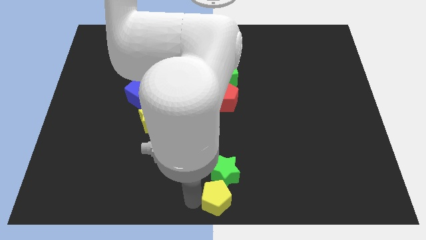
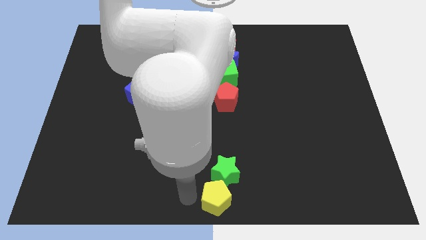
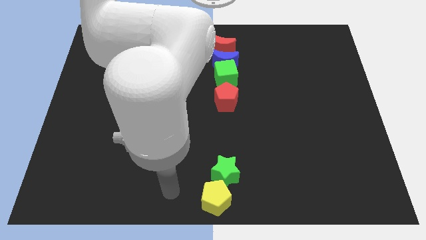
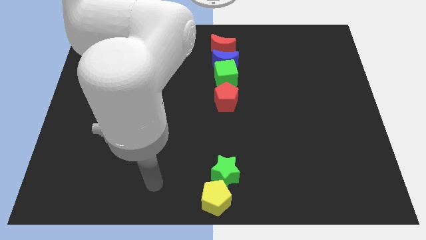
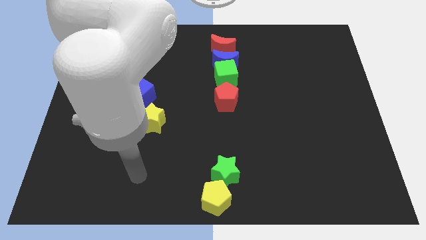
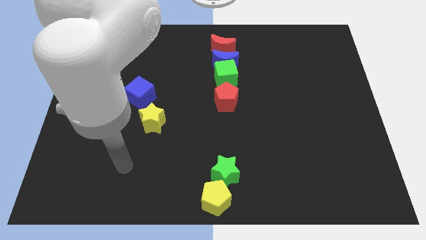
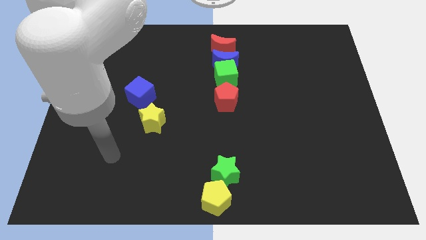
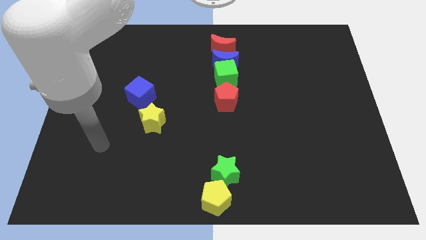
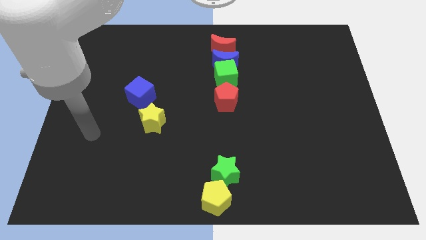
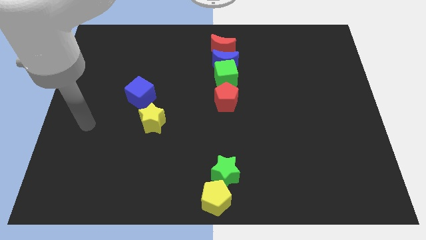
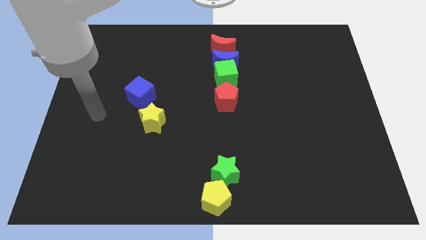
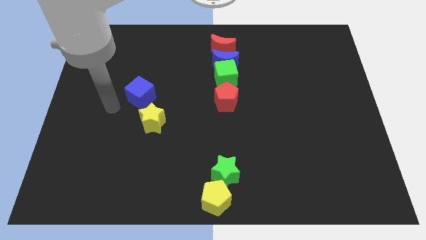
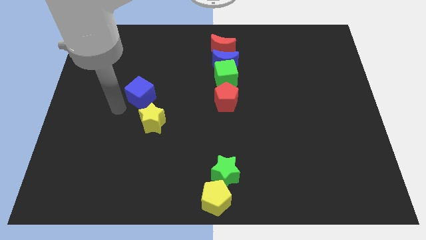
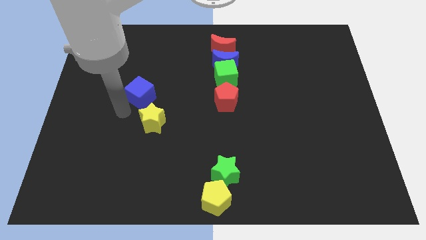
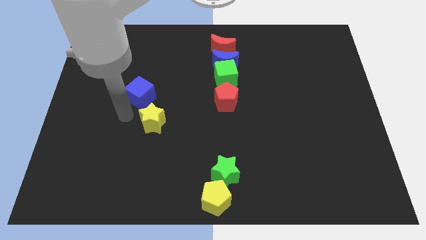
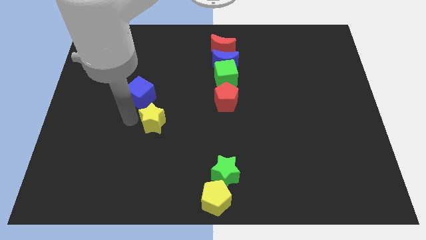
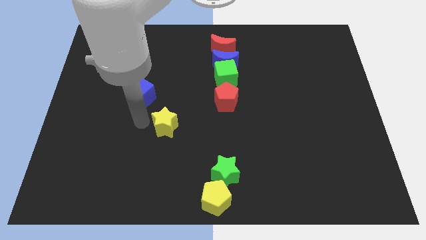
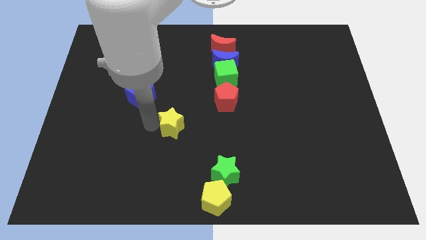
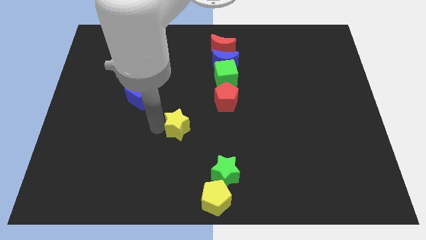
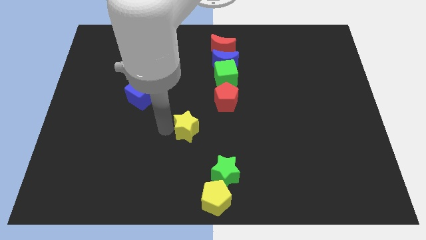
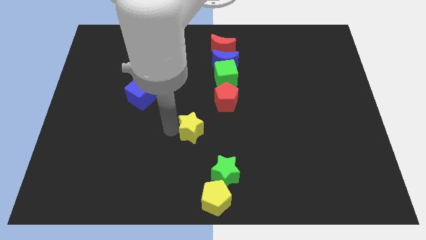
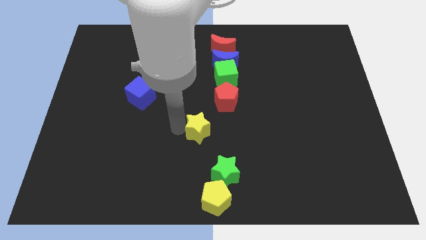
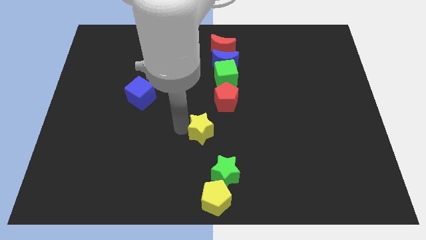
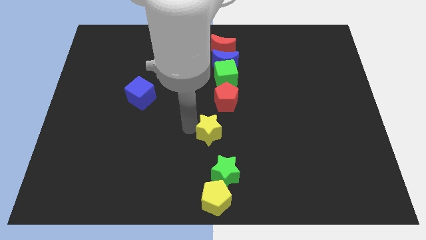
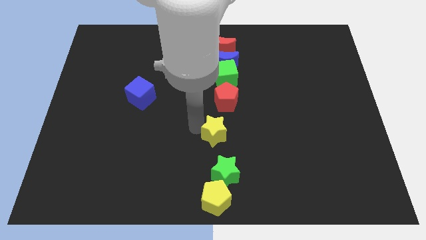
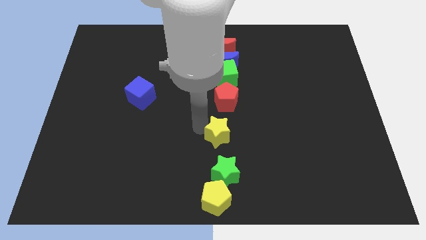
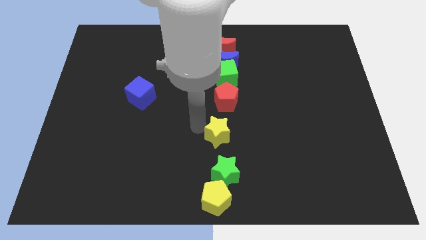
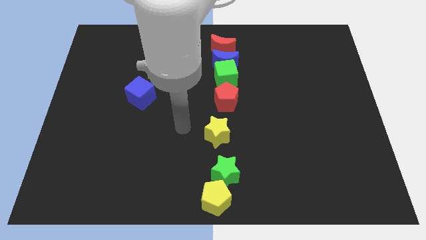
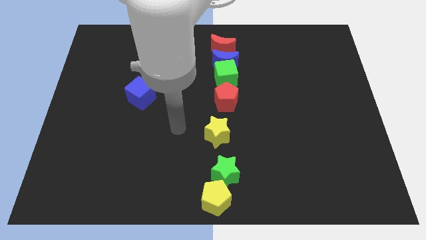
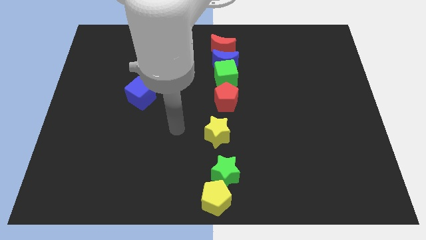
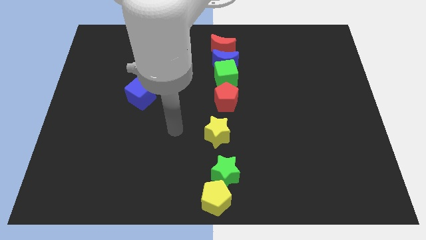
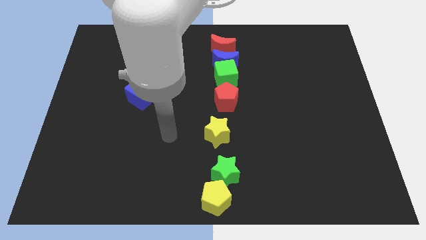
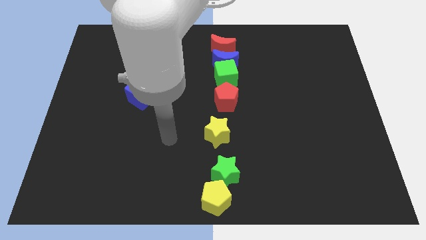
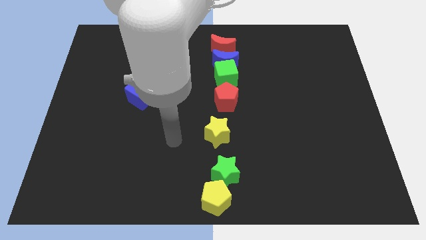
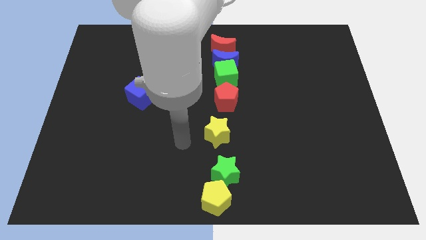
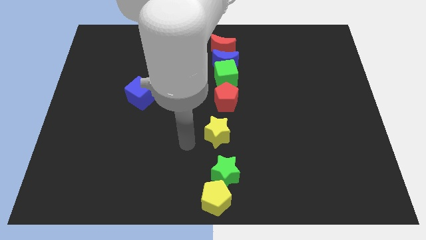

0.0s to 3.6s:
place the yellow star beside the green star

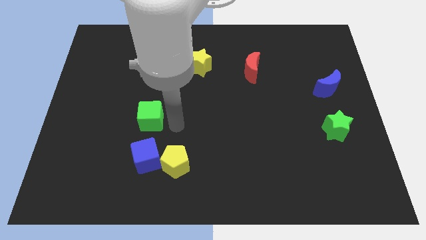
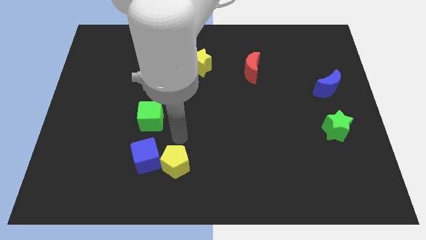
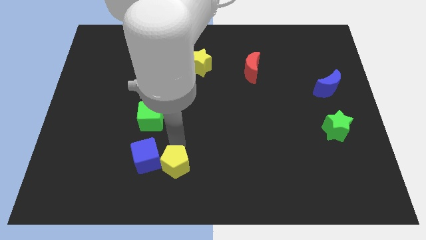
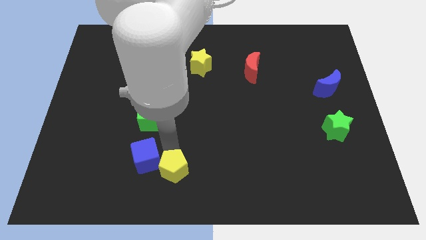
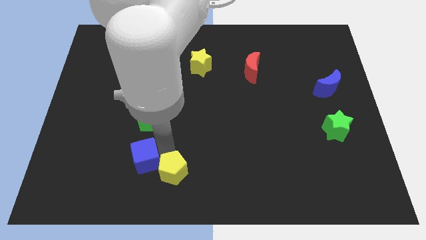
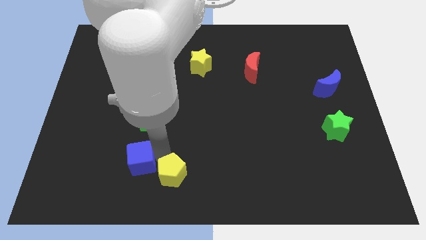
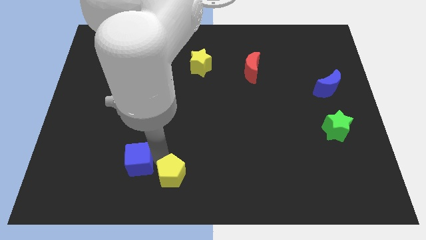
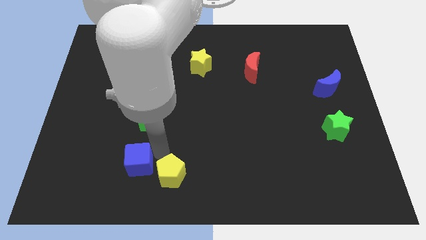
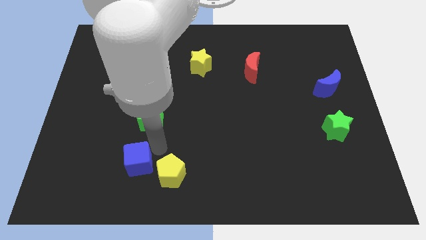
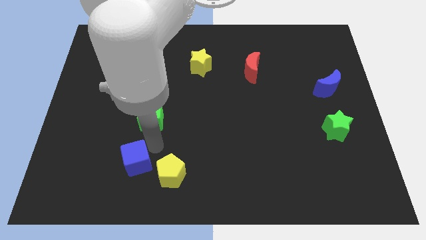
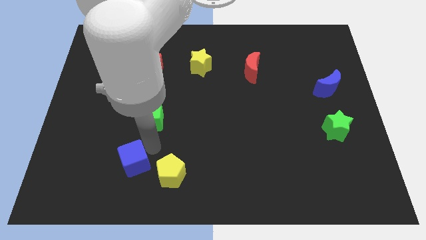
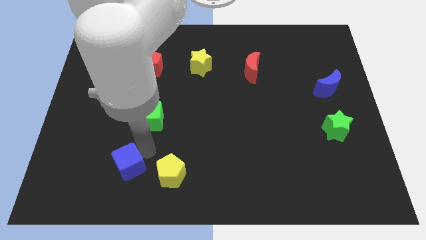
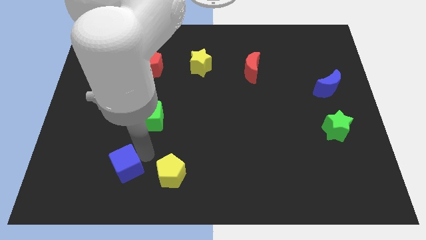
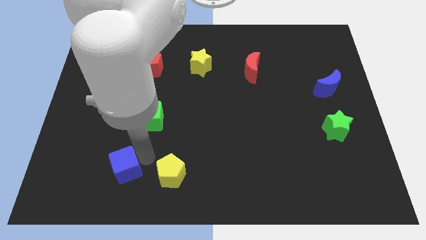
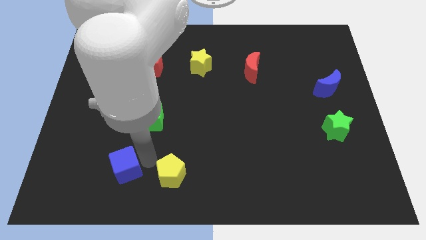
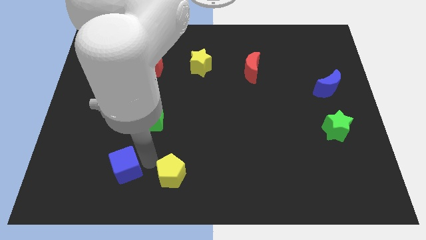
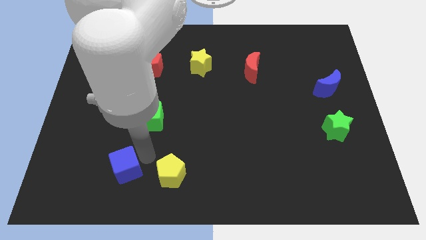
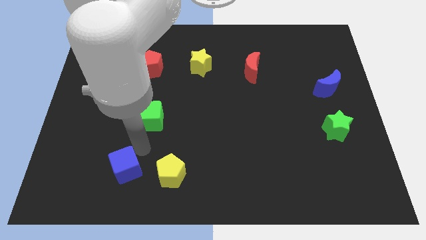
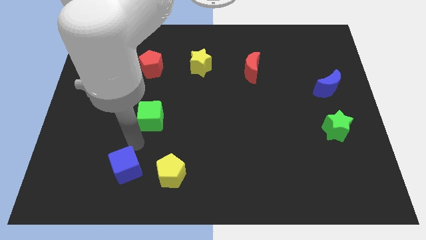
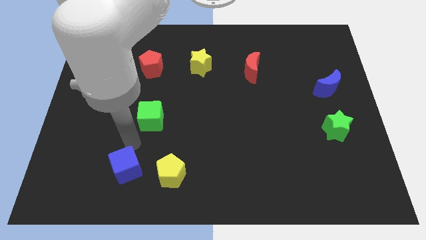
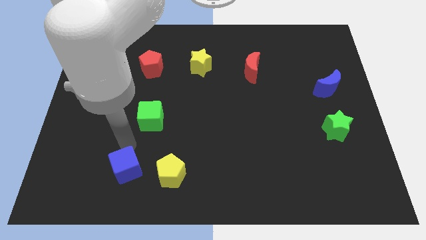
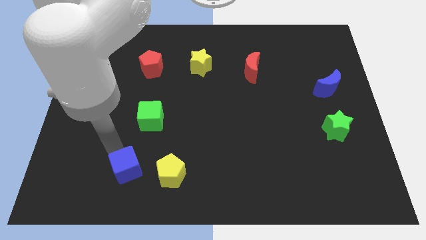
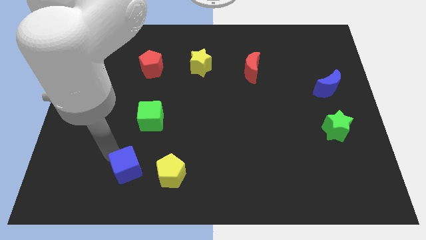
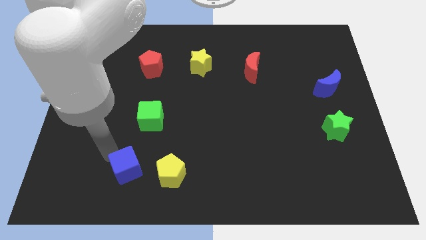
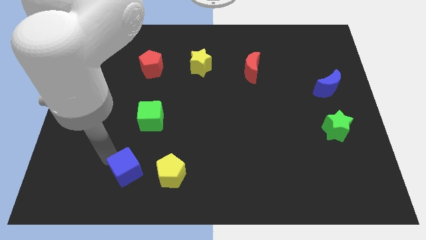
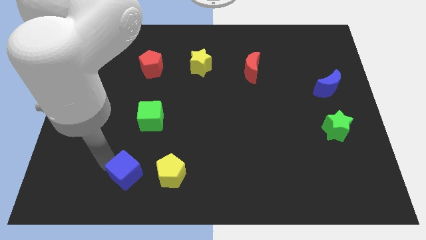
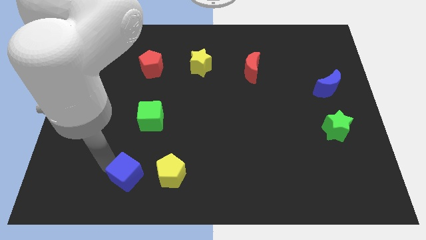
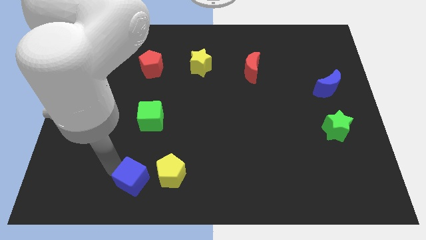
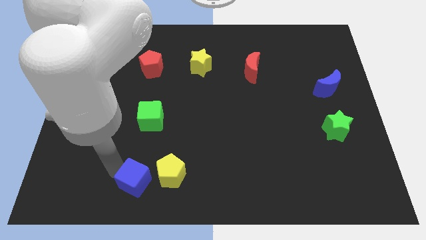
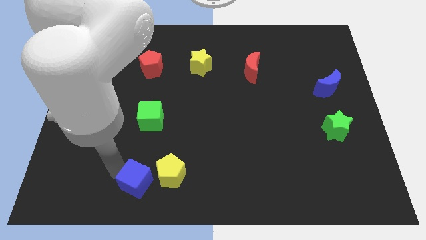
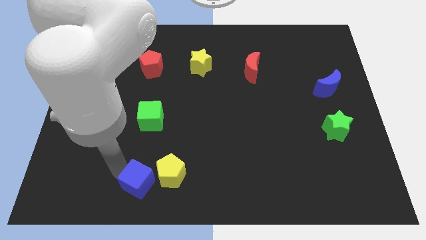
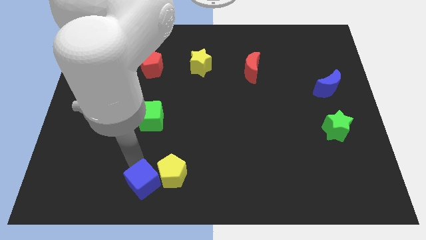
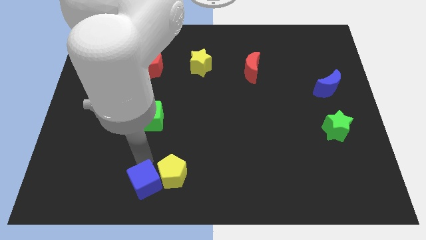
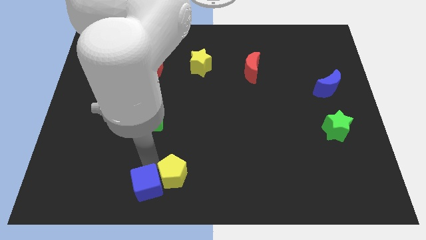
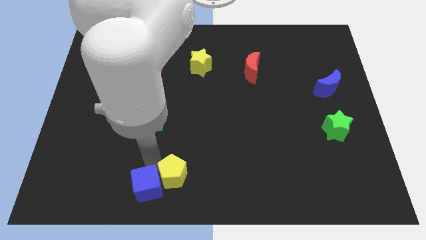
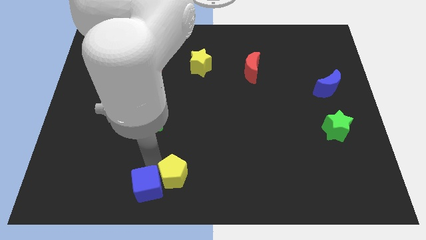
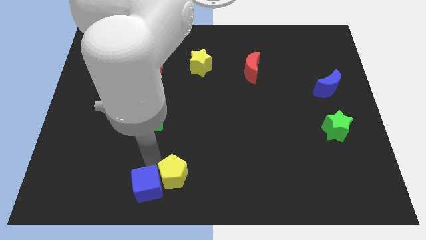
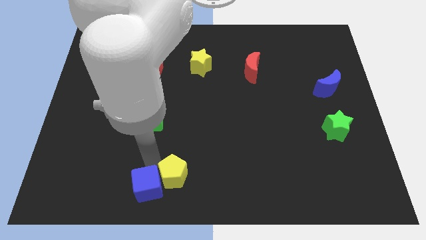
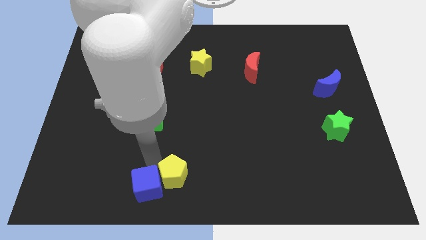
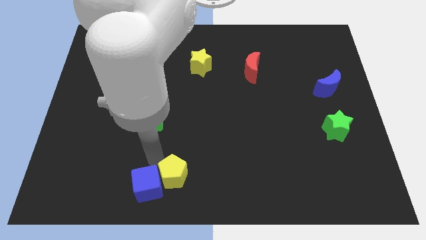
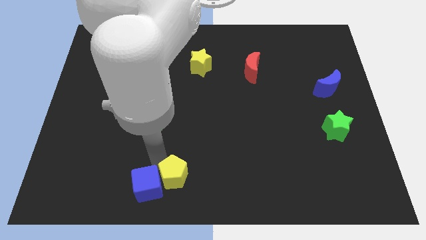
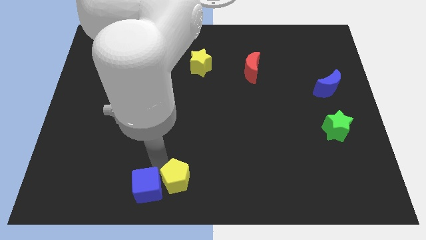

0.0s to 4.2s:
push the blue cube into the yellow pentagon

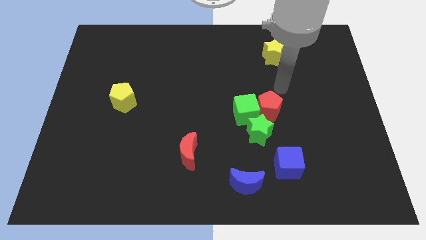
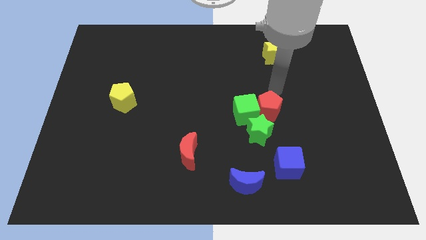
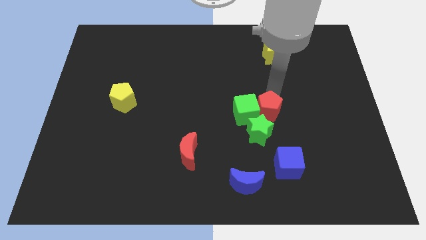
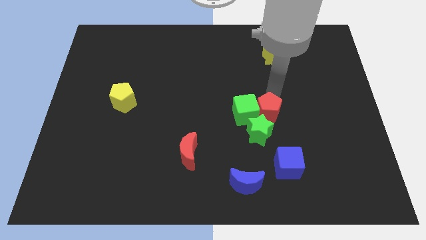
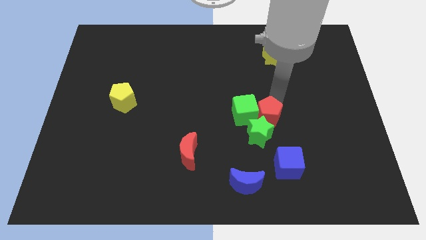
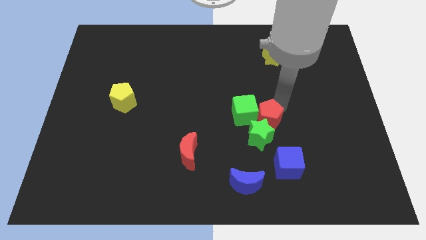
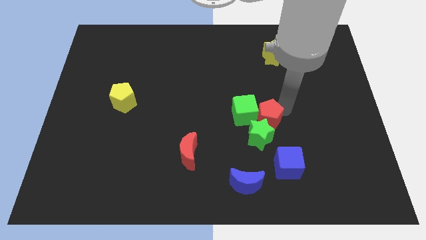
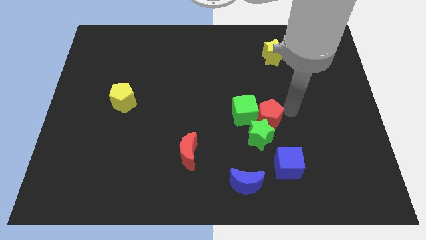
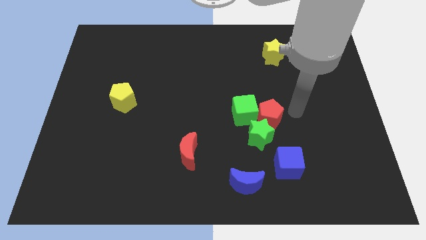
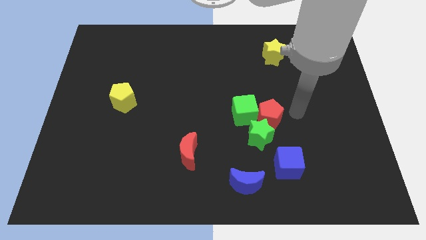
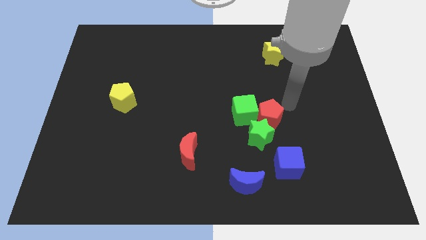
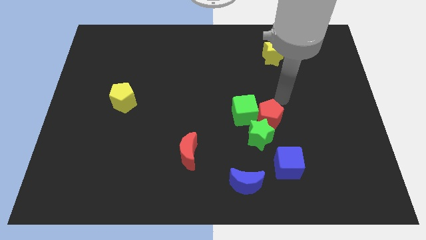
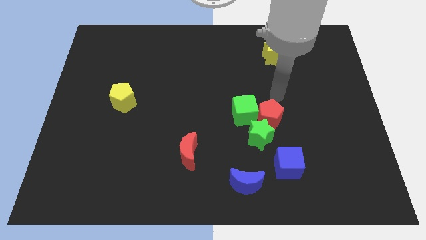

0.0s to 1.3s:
push red pentagon into green star

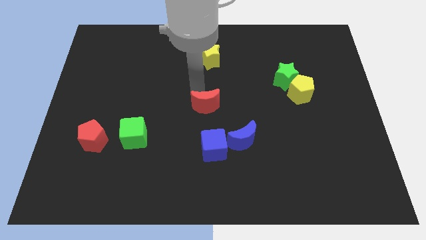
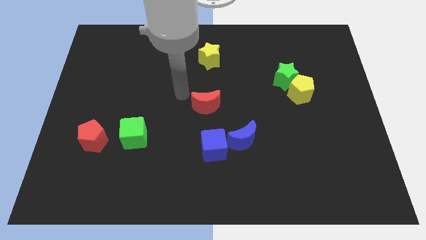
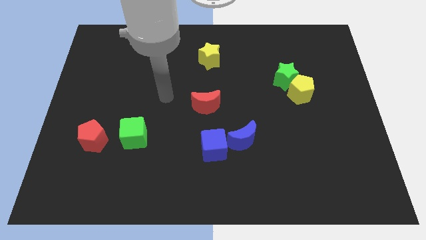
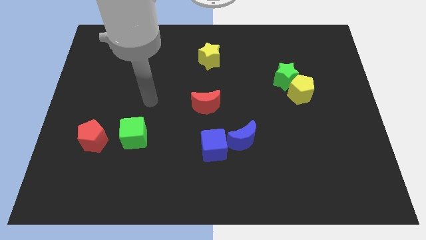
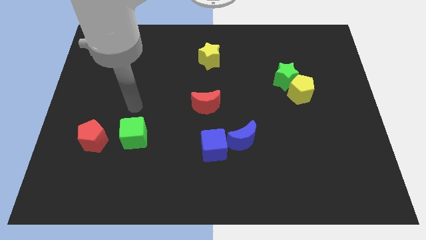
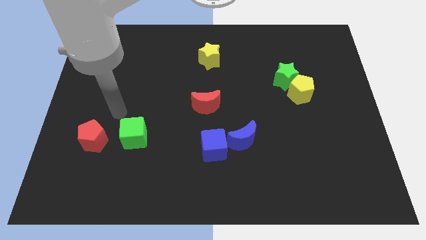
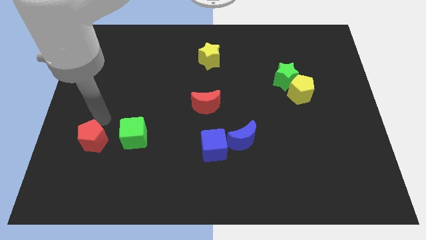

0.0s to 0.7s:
place your arm to the top of red pentagon
